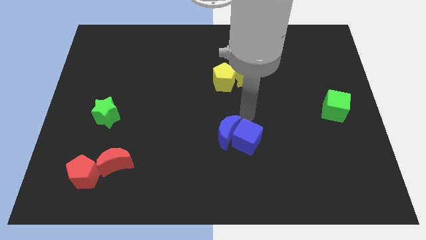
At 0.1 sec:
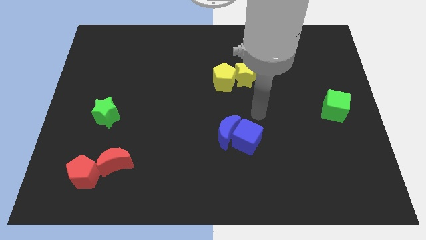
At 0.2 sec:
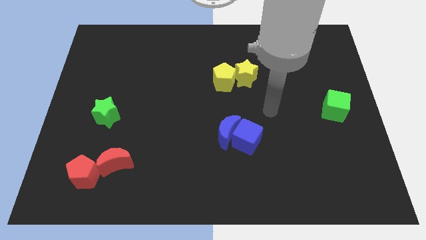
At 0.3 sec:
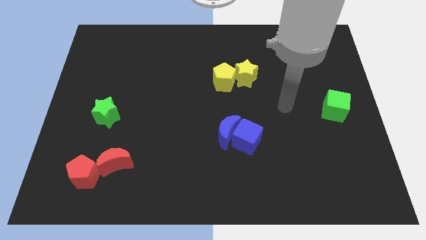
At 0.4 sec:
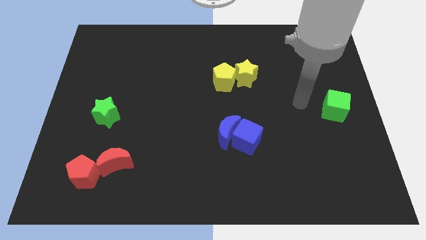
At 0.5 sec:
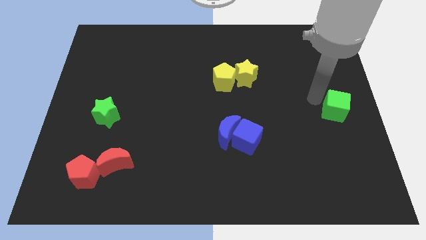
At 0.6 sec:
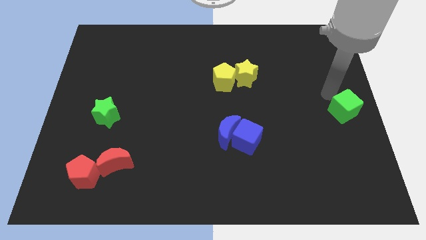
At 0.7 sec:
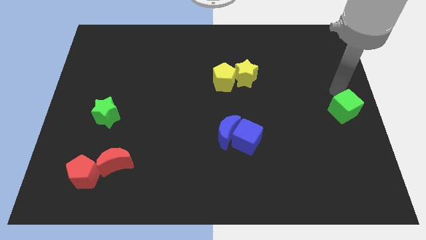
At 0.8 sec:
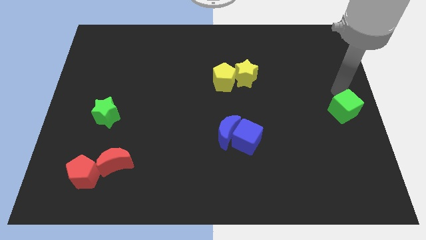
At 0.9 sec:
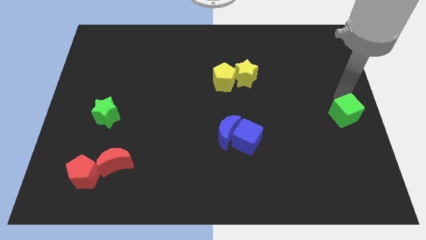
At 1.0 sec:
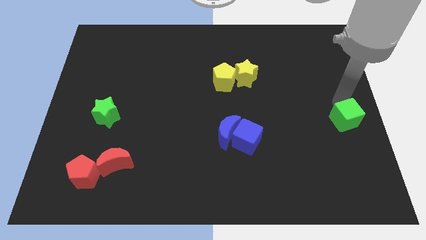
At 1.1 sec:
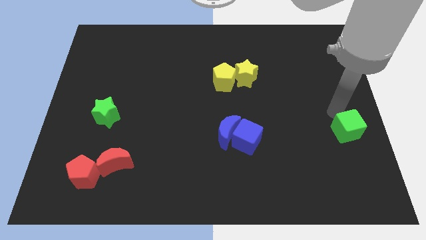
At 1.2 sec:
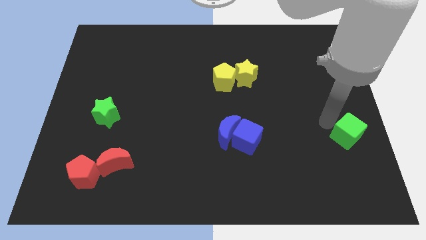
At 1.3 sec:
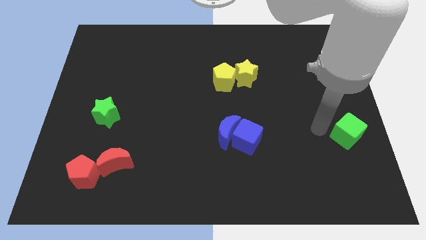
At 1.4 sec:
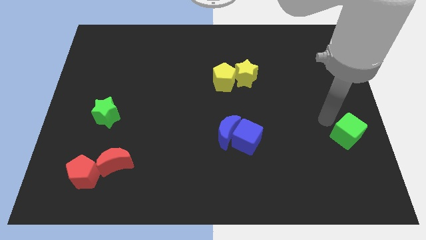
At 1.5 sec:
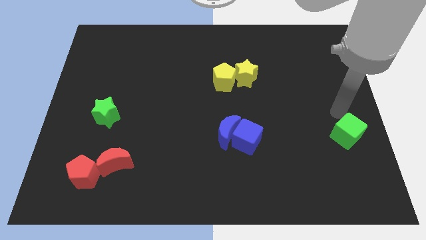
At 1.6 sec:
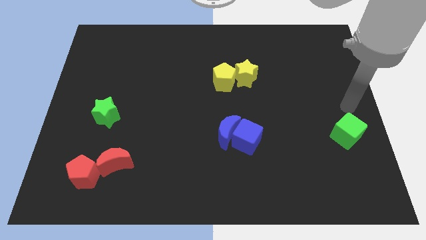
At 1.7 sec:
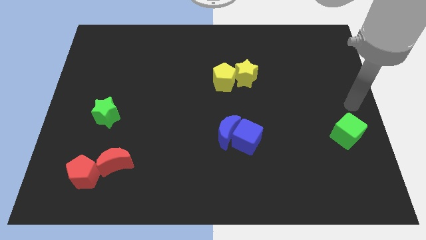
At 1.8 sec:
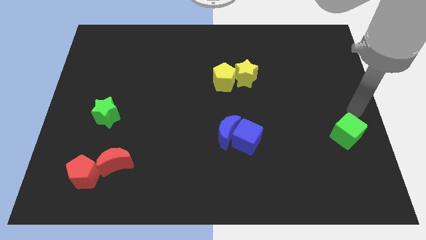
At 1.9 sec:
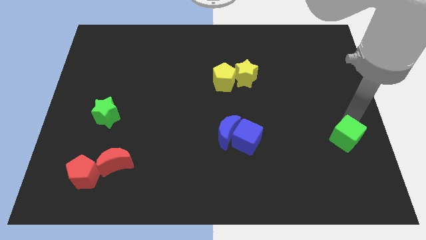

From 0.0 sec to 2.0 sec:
move the green cube to the right of blue cube

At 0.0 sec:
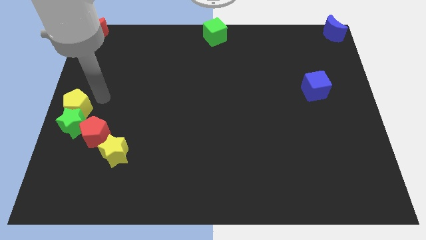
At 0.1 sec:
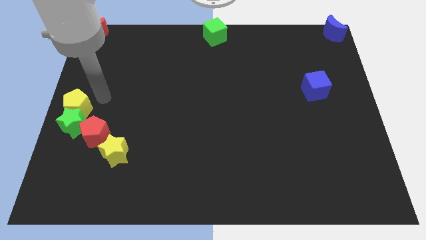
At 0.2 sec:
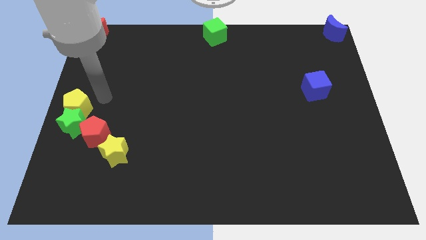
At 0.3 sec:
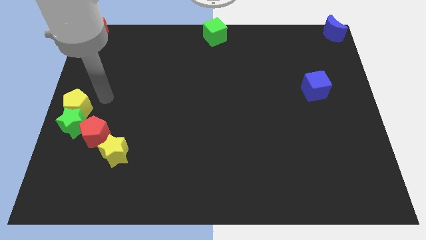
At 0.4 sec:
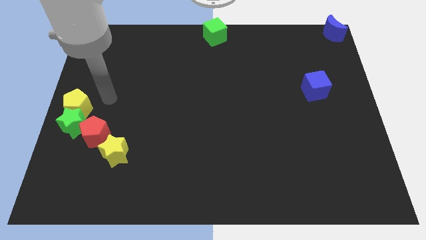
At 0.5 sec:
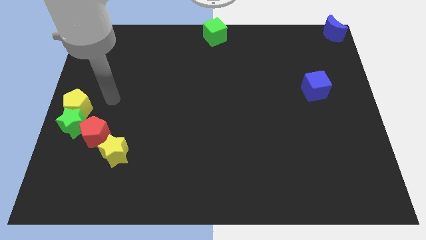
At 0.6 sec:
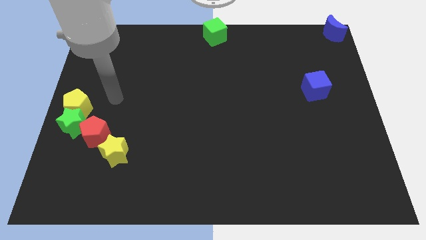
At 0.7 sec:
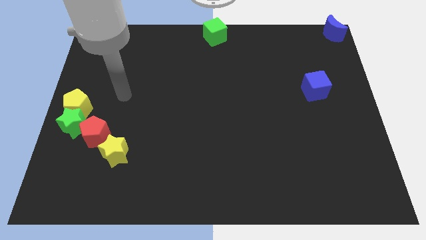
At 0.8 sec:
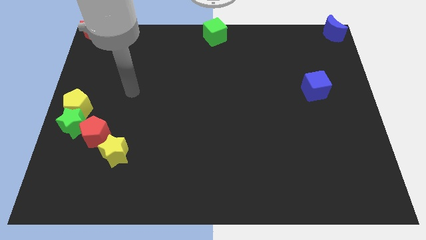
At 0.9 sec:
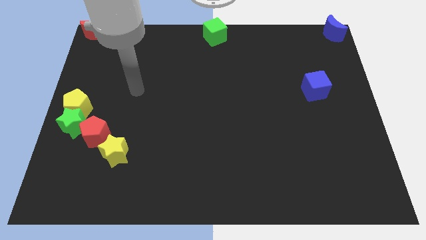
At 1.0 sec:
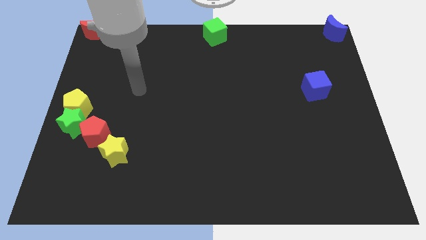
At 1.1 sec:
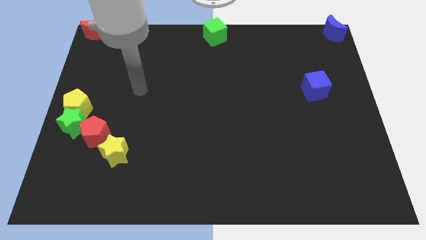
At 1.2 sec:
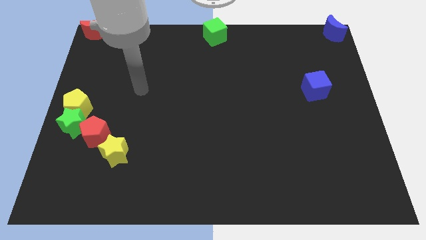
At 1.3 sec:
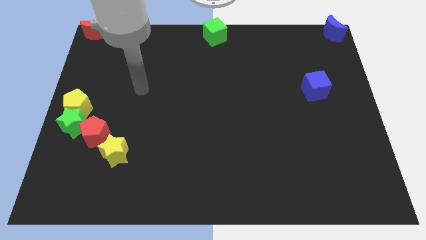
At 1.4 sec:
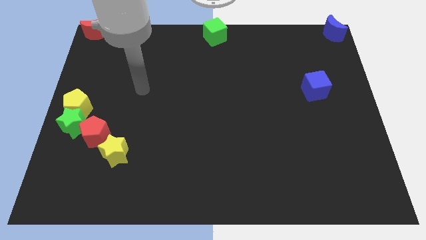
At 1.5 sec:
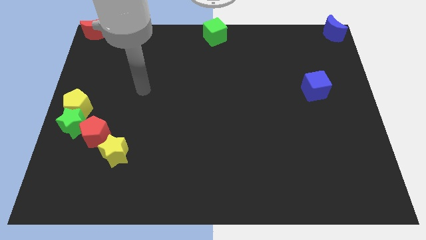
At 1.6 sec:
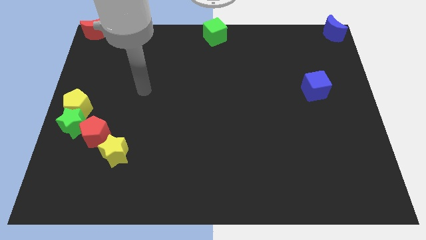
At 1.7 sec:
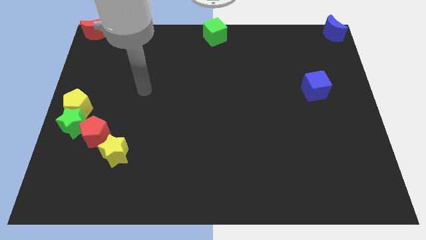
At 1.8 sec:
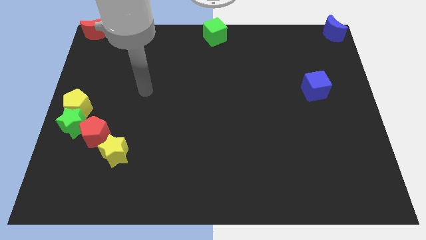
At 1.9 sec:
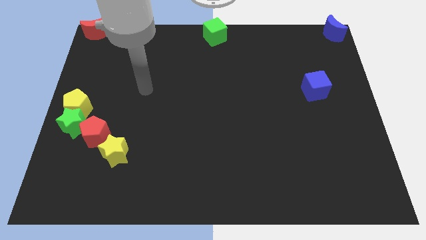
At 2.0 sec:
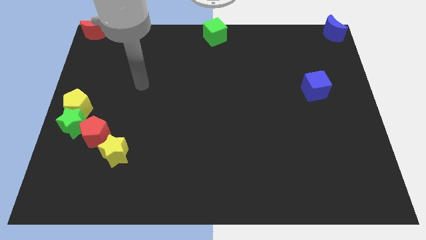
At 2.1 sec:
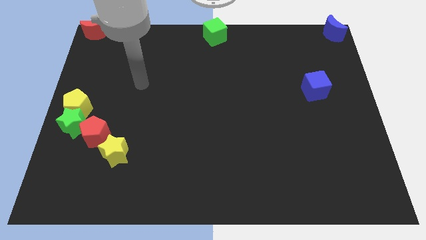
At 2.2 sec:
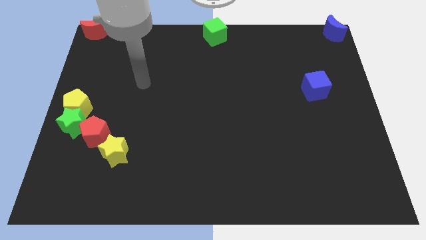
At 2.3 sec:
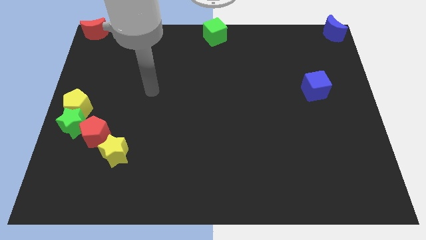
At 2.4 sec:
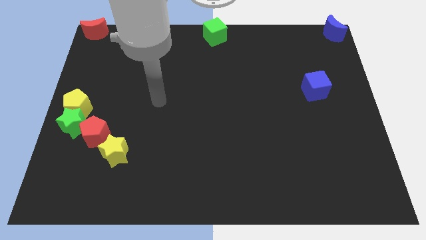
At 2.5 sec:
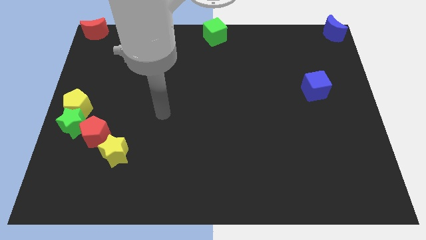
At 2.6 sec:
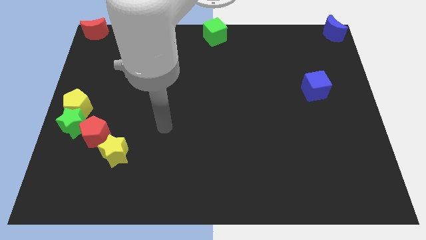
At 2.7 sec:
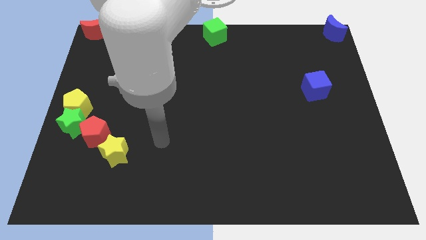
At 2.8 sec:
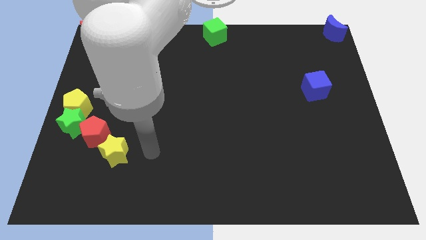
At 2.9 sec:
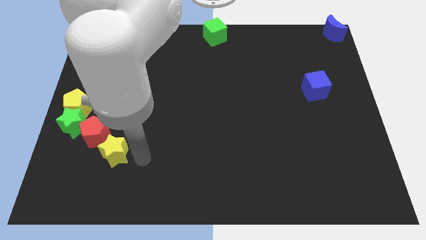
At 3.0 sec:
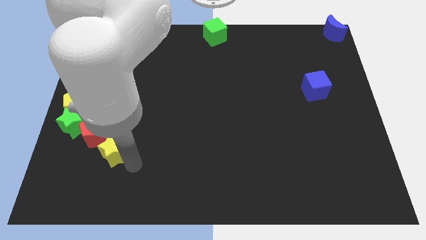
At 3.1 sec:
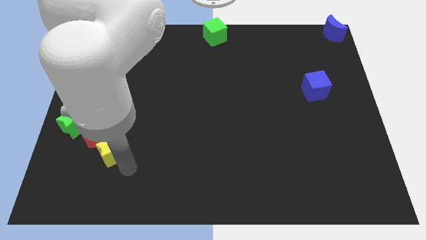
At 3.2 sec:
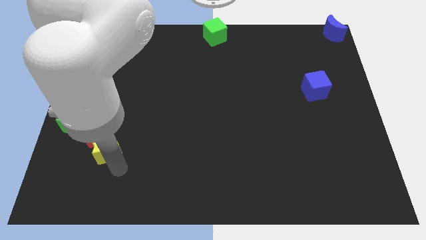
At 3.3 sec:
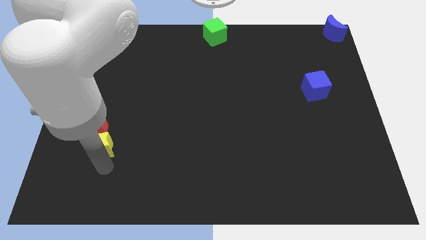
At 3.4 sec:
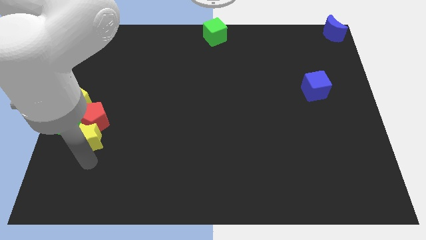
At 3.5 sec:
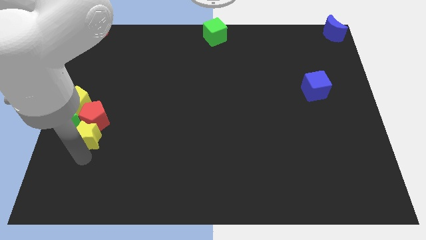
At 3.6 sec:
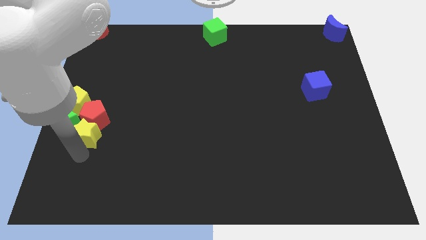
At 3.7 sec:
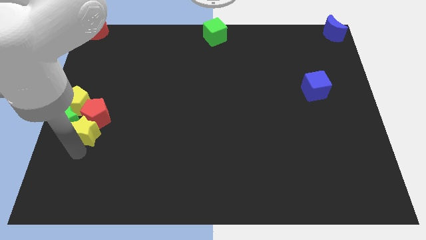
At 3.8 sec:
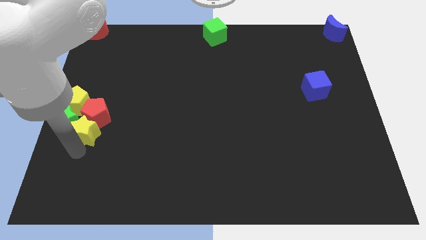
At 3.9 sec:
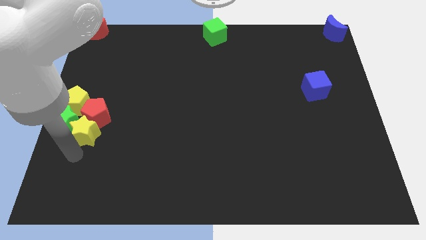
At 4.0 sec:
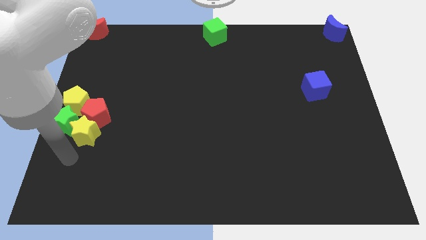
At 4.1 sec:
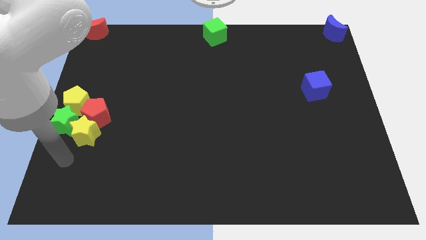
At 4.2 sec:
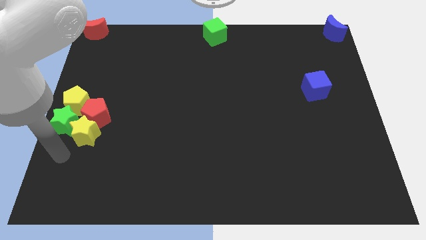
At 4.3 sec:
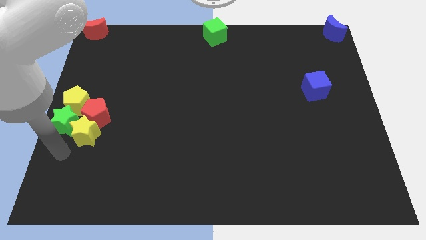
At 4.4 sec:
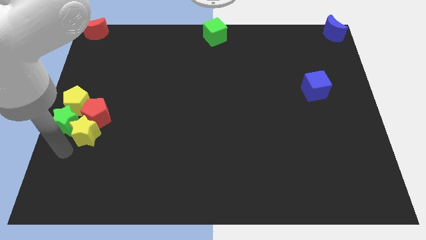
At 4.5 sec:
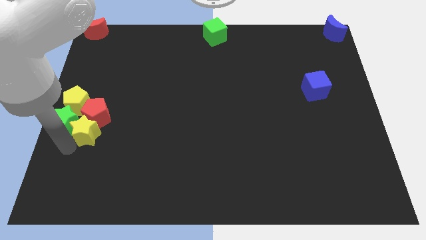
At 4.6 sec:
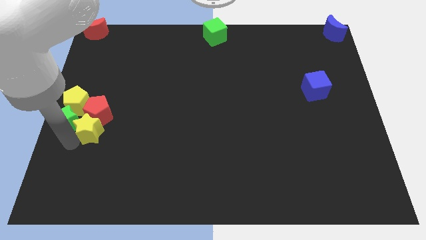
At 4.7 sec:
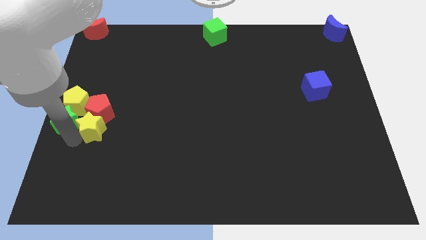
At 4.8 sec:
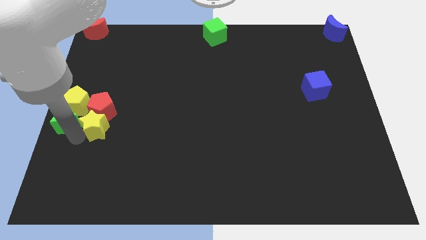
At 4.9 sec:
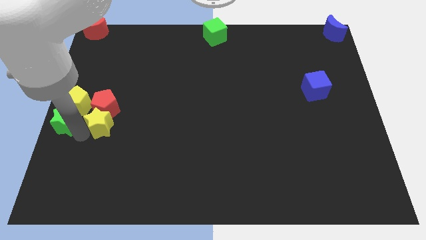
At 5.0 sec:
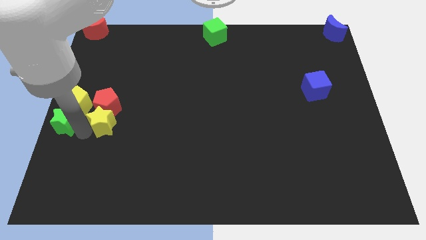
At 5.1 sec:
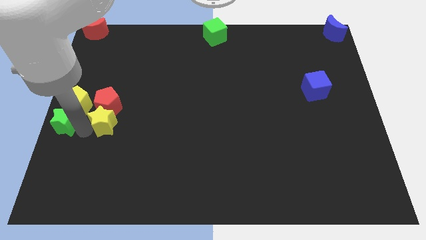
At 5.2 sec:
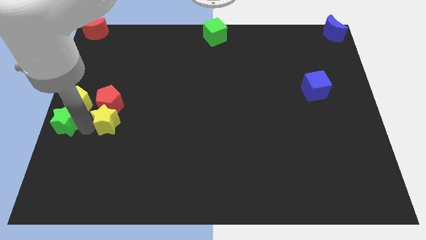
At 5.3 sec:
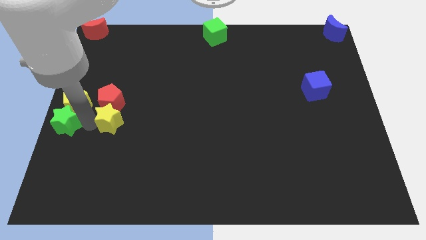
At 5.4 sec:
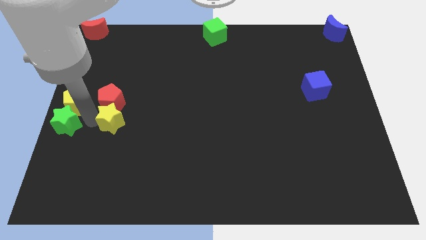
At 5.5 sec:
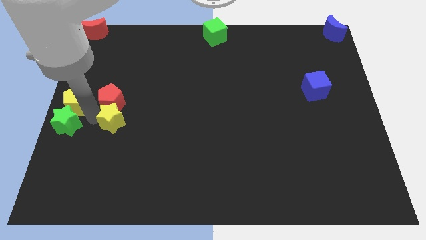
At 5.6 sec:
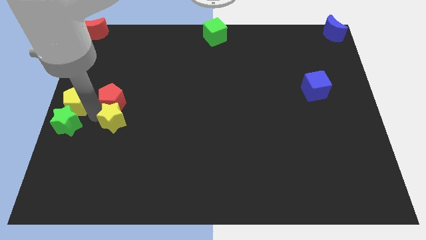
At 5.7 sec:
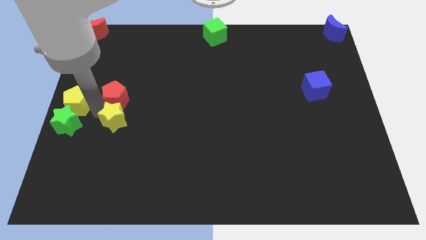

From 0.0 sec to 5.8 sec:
push the yellow star into the red pentagon

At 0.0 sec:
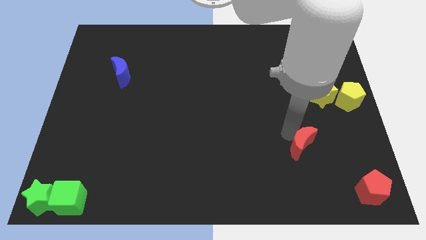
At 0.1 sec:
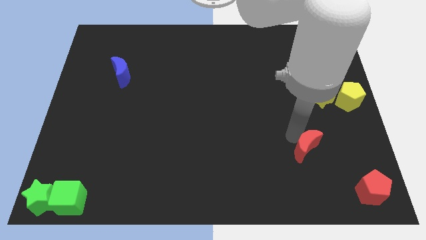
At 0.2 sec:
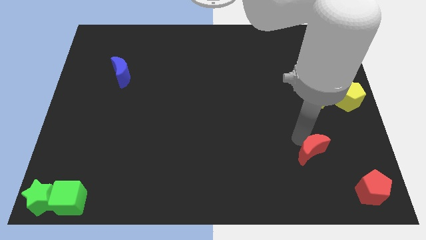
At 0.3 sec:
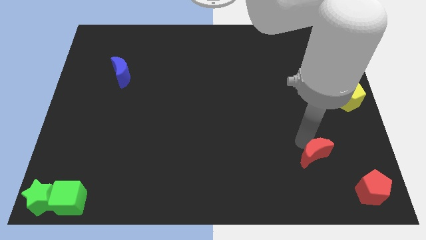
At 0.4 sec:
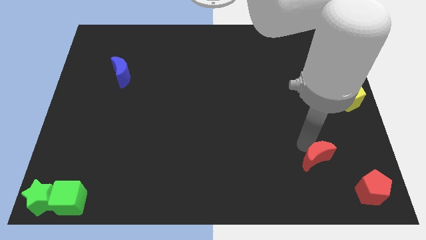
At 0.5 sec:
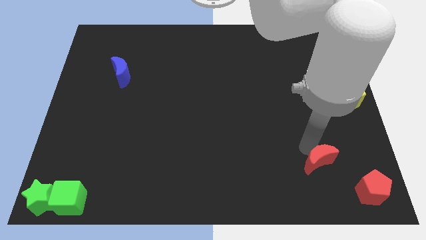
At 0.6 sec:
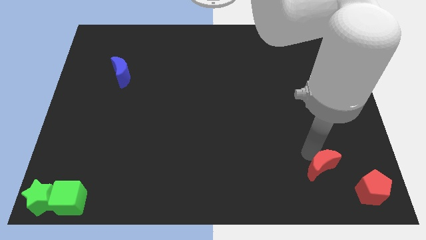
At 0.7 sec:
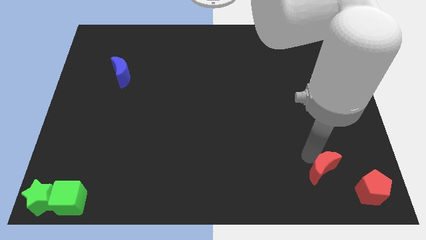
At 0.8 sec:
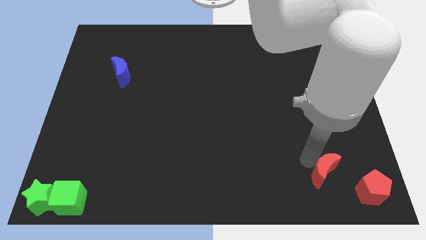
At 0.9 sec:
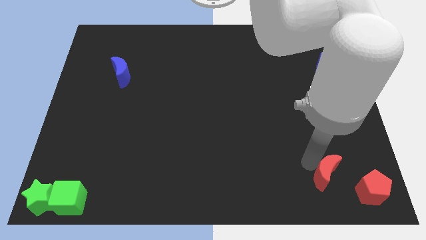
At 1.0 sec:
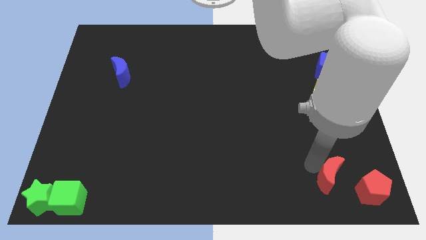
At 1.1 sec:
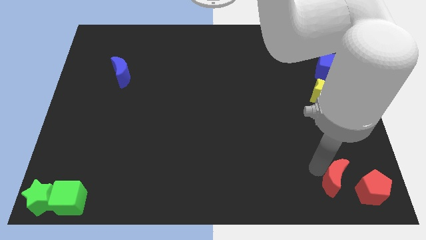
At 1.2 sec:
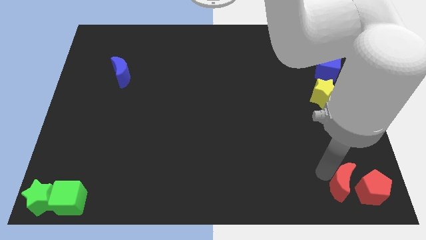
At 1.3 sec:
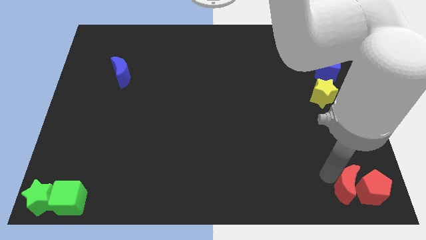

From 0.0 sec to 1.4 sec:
move the red crescent towards the left of red pentagon to the bottom right
